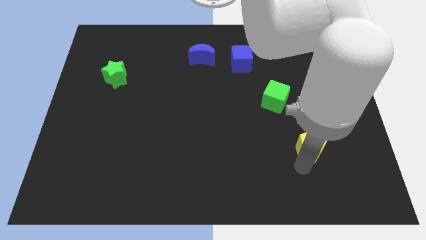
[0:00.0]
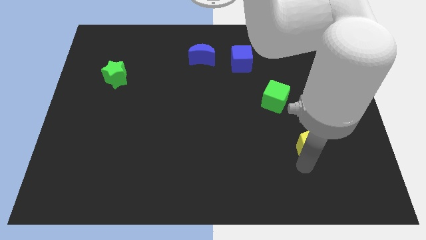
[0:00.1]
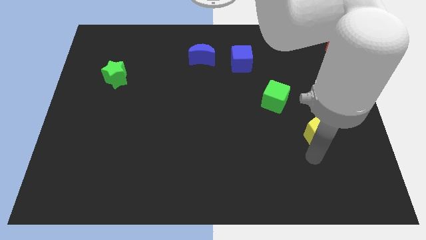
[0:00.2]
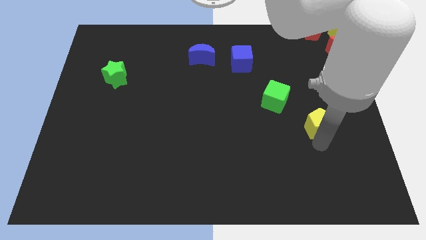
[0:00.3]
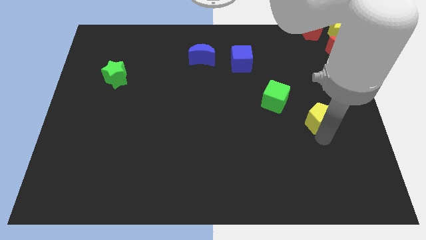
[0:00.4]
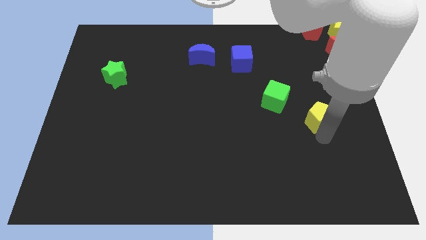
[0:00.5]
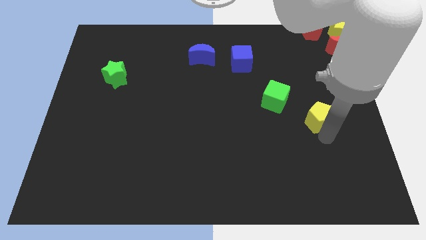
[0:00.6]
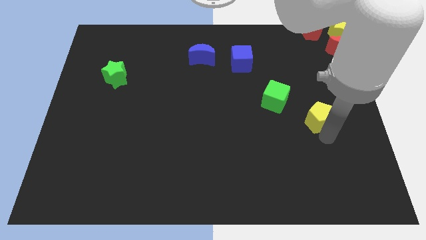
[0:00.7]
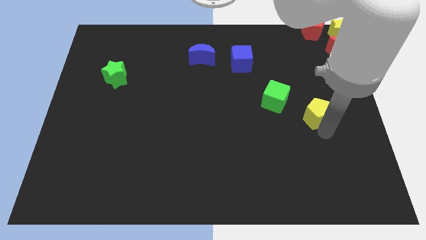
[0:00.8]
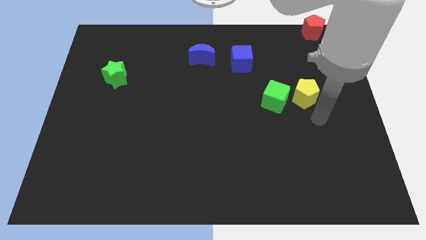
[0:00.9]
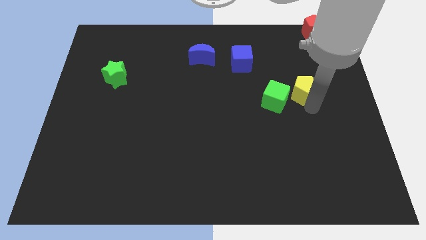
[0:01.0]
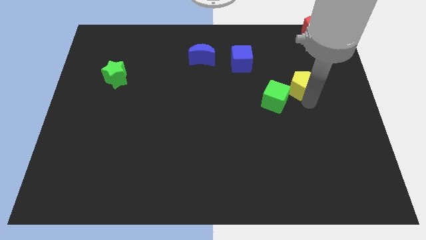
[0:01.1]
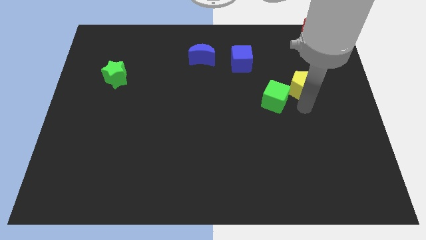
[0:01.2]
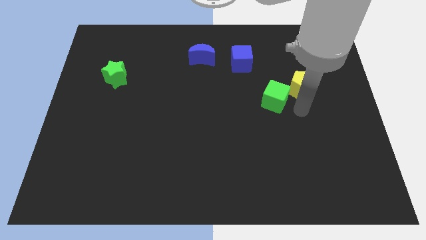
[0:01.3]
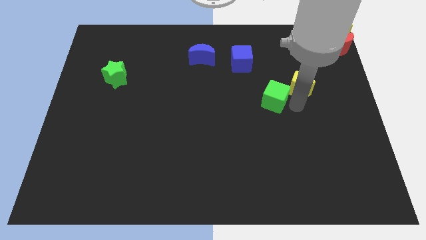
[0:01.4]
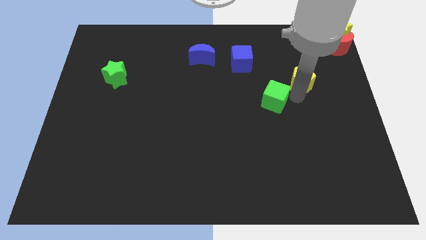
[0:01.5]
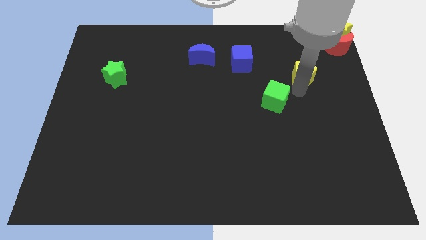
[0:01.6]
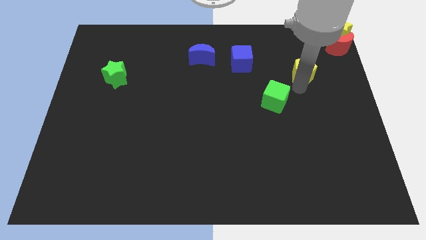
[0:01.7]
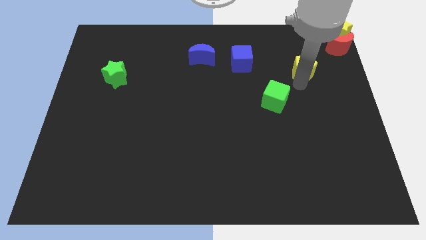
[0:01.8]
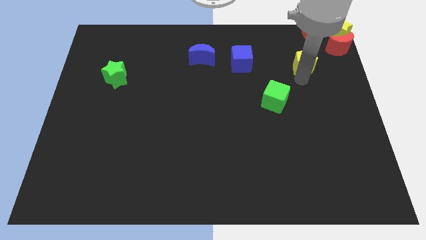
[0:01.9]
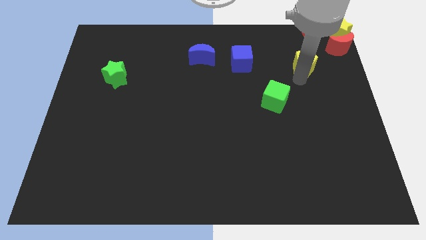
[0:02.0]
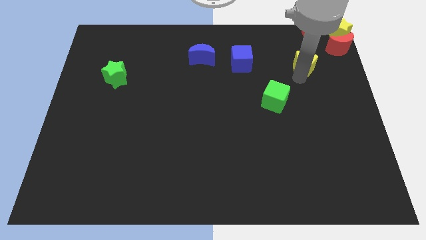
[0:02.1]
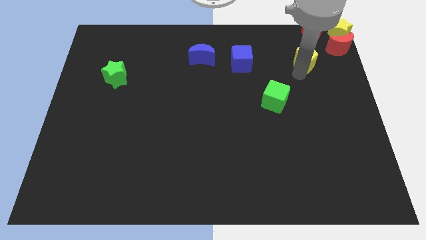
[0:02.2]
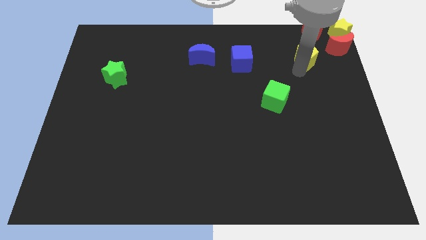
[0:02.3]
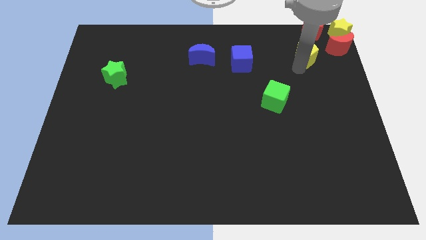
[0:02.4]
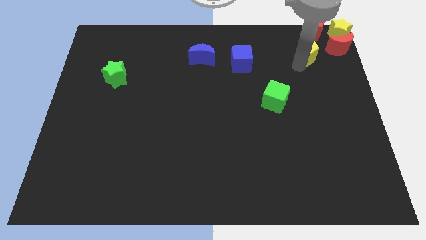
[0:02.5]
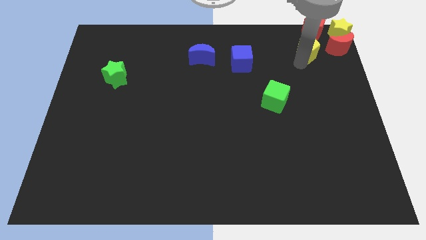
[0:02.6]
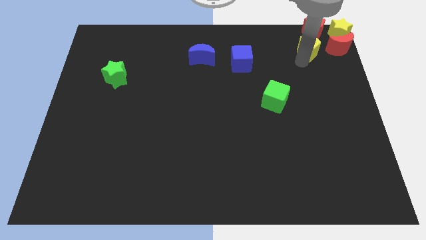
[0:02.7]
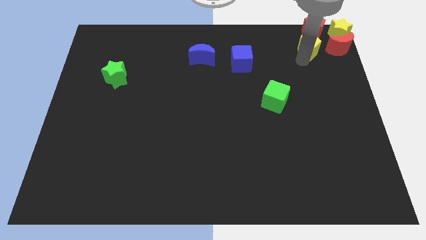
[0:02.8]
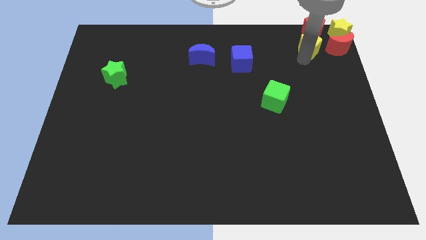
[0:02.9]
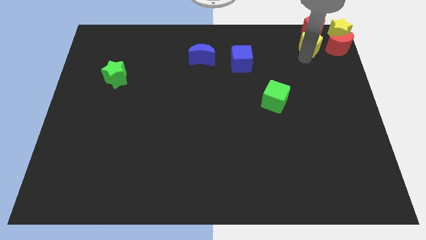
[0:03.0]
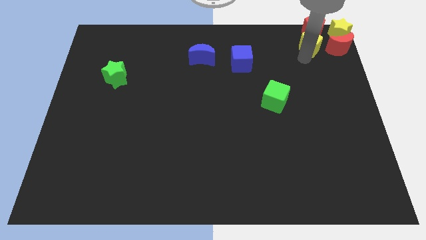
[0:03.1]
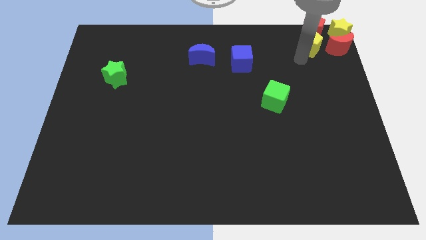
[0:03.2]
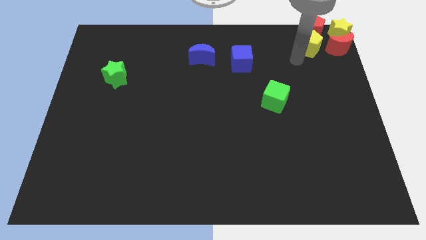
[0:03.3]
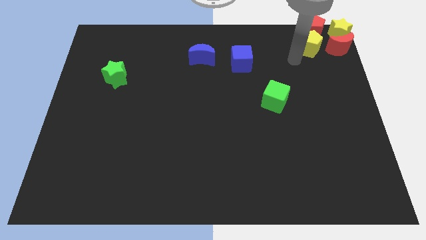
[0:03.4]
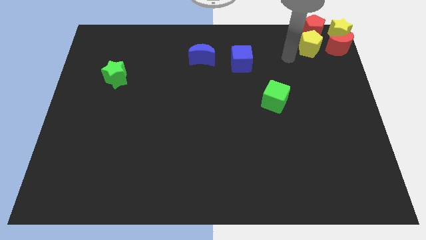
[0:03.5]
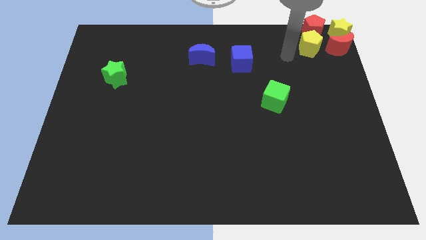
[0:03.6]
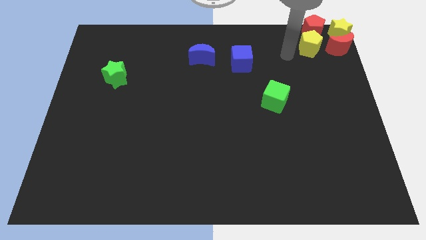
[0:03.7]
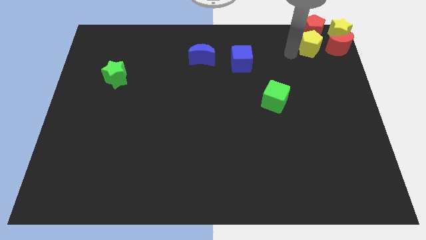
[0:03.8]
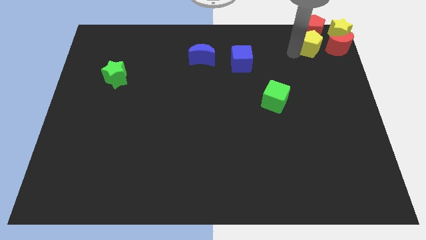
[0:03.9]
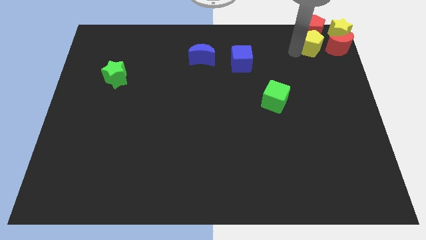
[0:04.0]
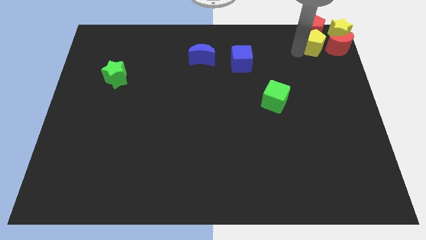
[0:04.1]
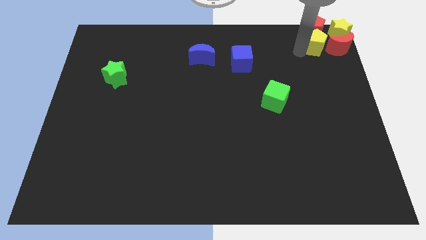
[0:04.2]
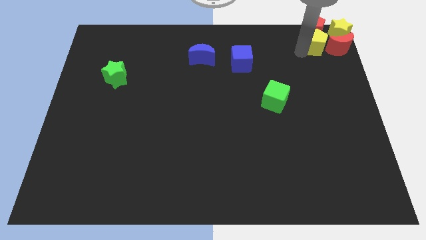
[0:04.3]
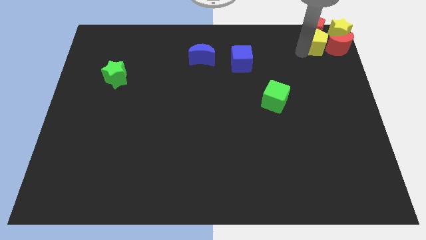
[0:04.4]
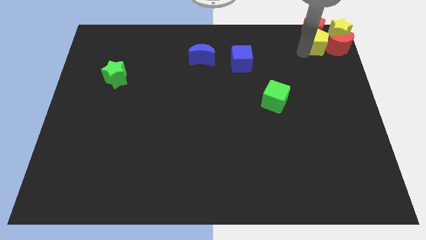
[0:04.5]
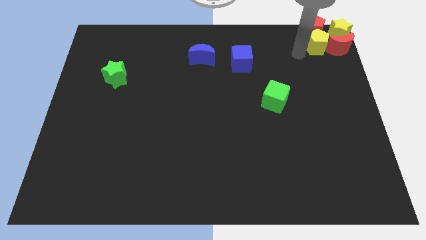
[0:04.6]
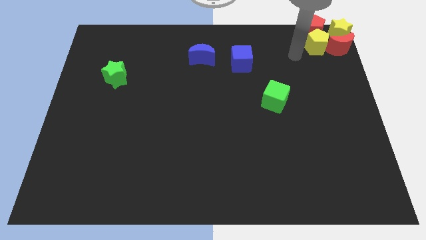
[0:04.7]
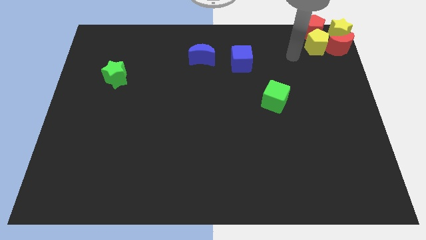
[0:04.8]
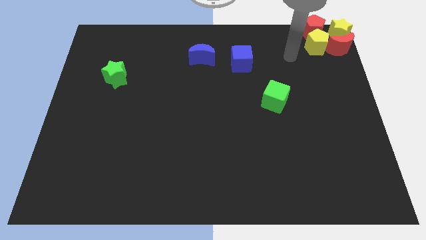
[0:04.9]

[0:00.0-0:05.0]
add the yellow pentagon to the group of blocks at the top right side of the board

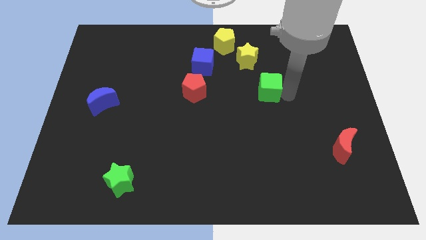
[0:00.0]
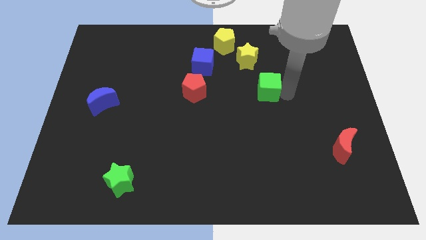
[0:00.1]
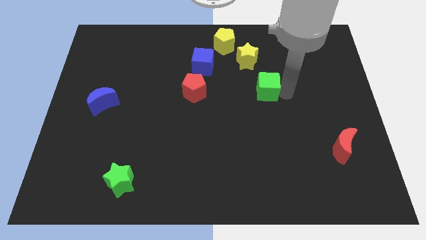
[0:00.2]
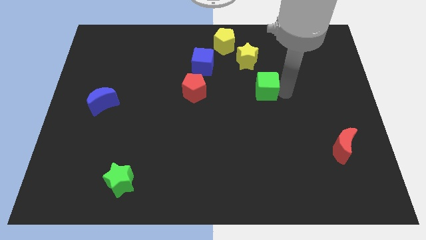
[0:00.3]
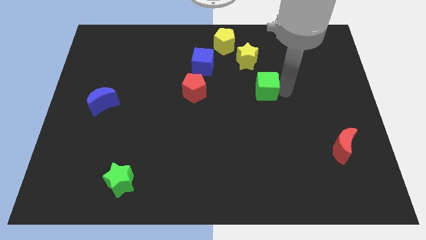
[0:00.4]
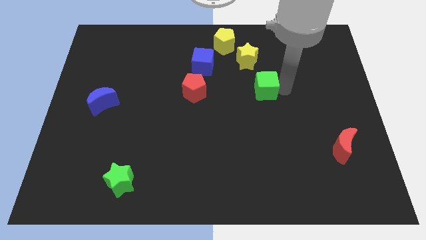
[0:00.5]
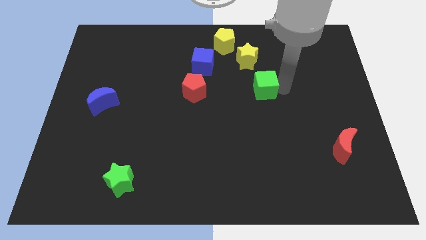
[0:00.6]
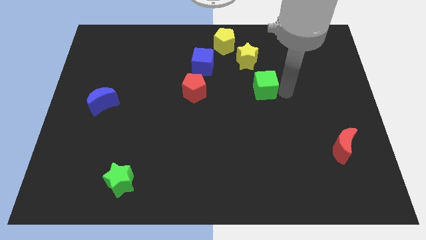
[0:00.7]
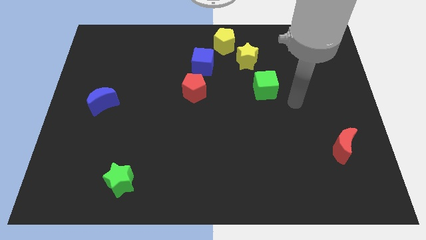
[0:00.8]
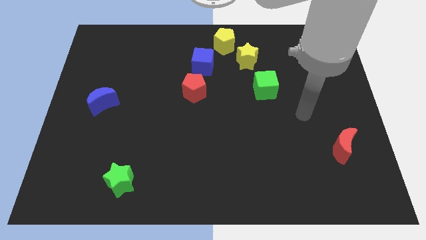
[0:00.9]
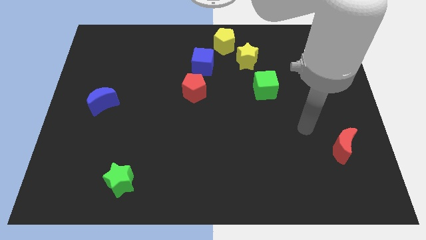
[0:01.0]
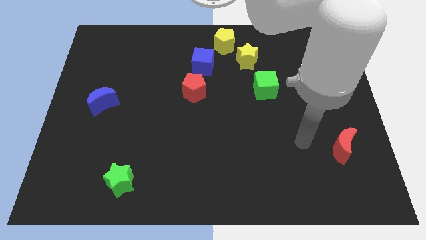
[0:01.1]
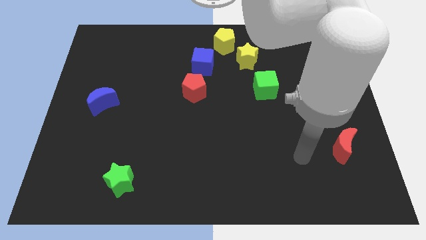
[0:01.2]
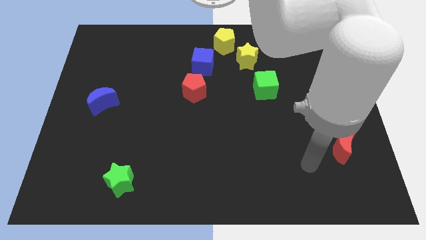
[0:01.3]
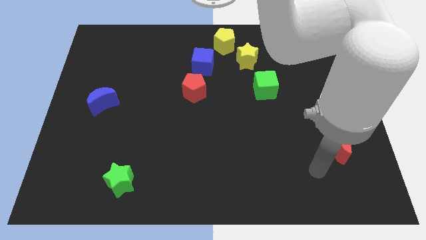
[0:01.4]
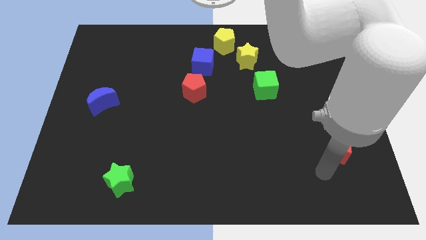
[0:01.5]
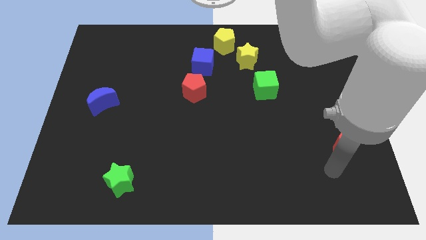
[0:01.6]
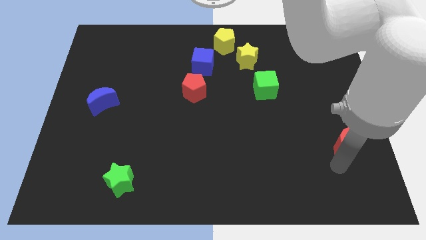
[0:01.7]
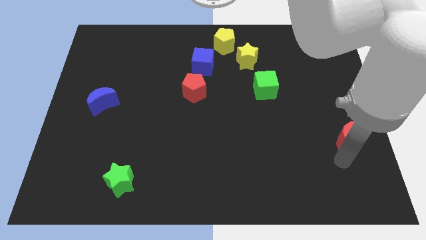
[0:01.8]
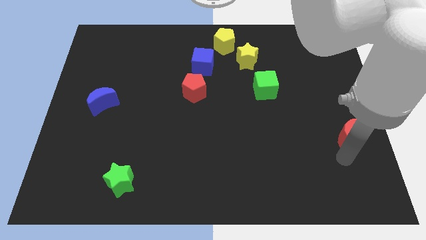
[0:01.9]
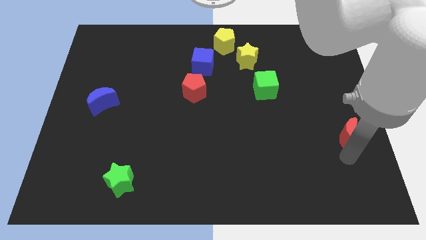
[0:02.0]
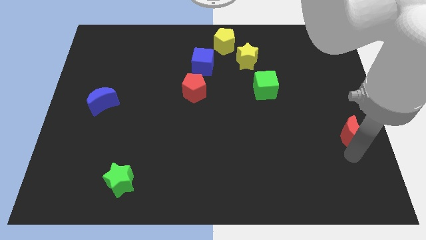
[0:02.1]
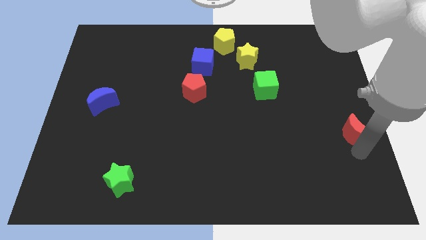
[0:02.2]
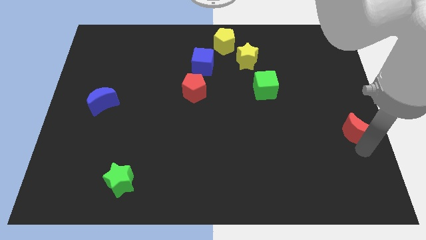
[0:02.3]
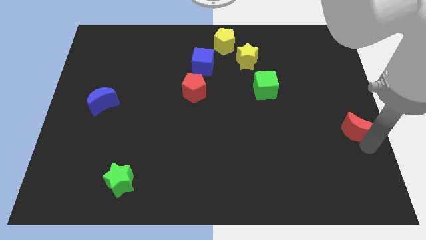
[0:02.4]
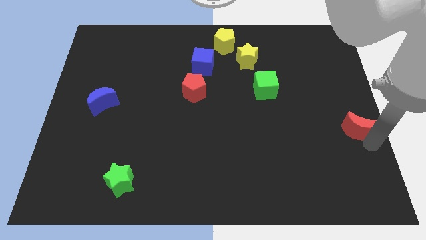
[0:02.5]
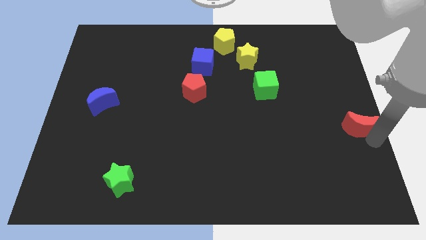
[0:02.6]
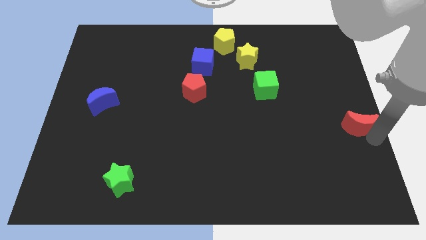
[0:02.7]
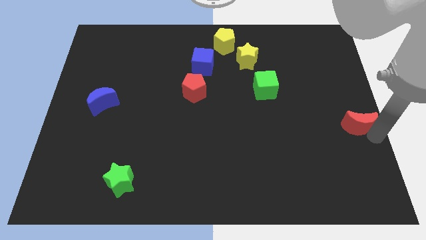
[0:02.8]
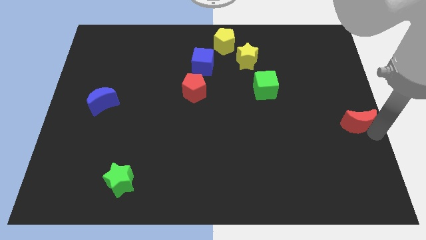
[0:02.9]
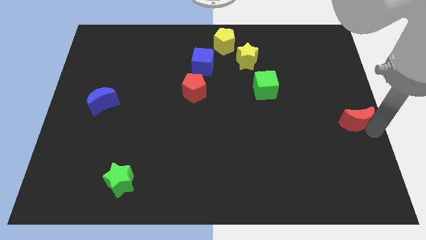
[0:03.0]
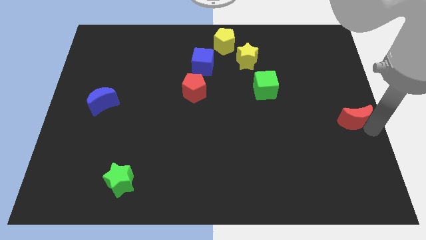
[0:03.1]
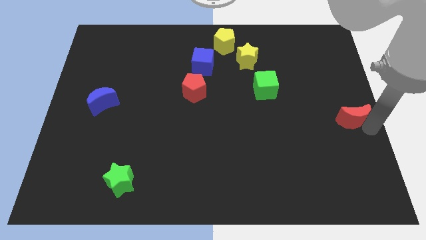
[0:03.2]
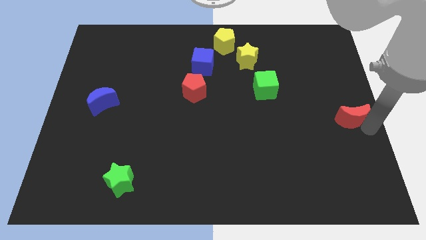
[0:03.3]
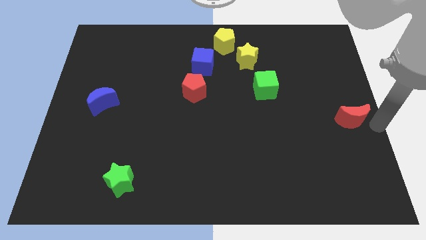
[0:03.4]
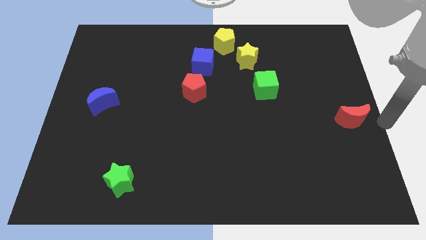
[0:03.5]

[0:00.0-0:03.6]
push red crescent slightly towards upside

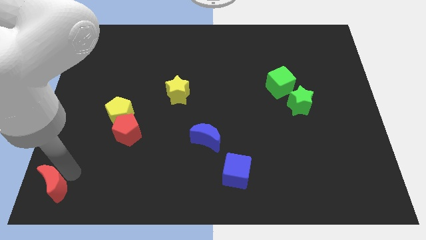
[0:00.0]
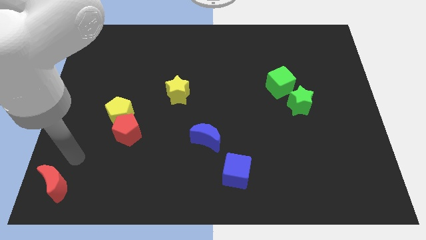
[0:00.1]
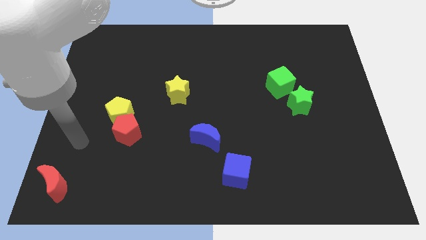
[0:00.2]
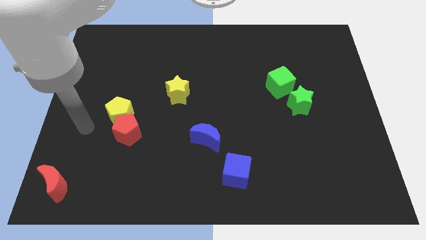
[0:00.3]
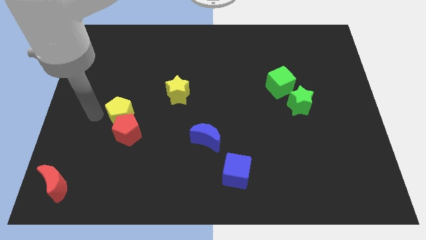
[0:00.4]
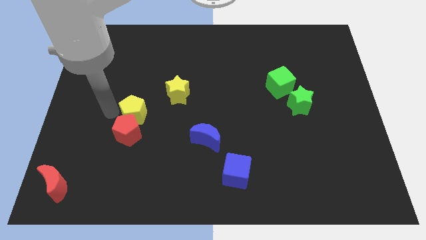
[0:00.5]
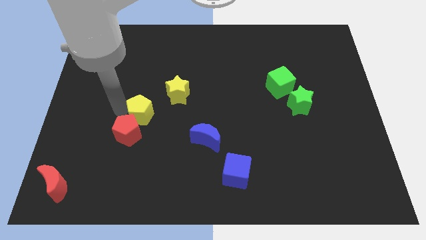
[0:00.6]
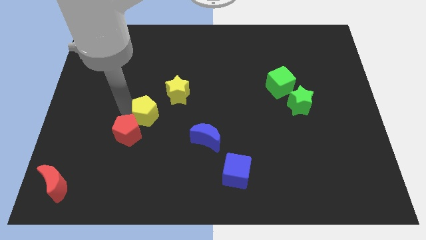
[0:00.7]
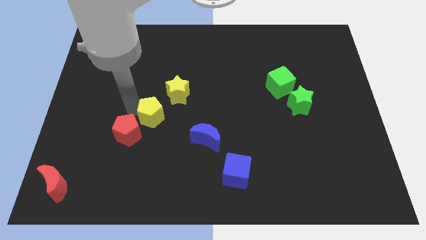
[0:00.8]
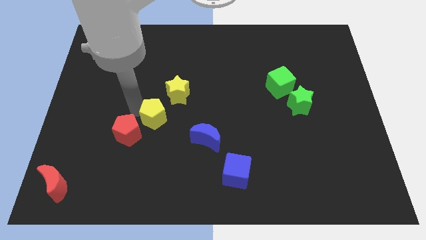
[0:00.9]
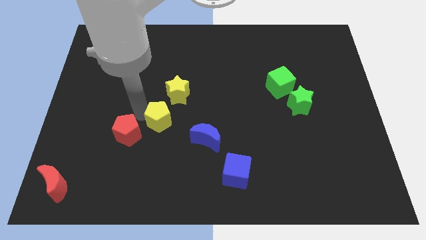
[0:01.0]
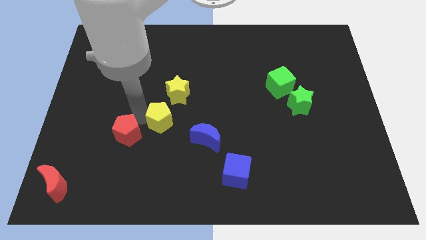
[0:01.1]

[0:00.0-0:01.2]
move the yellow pentagon away from the red pentagon
